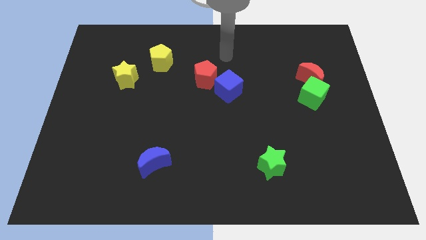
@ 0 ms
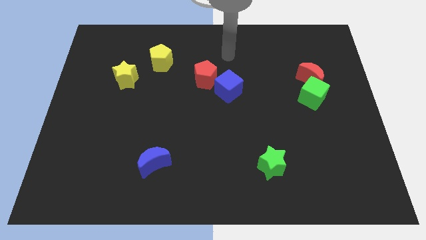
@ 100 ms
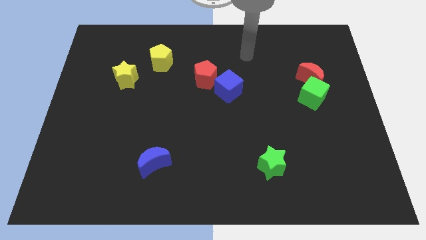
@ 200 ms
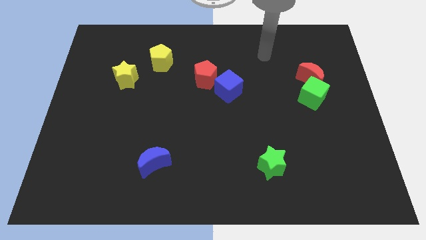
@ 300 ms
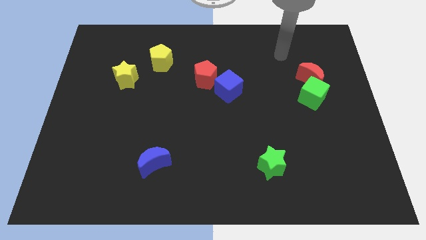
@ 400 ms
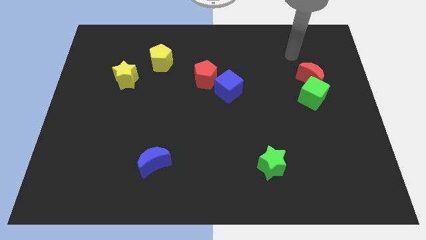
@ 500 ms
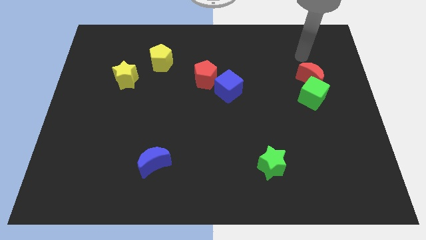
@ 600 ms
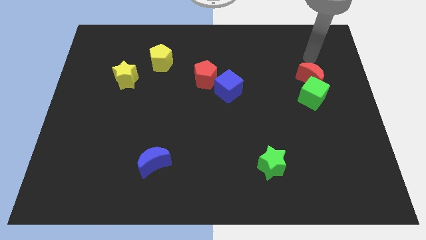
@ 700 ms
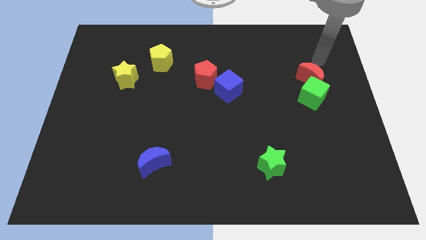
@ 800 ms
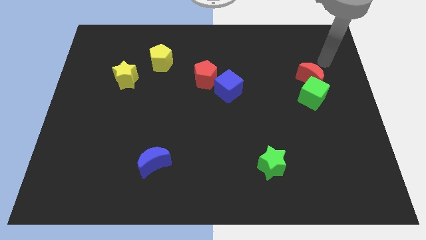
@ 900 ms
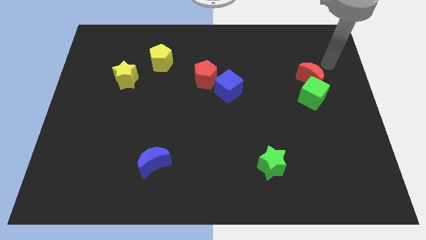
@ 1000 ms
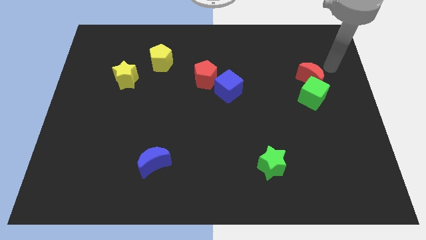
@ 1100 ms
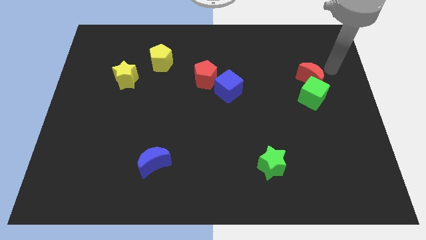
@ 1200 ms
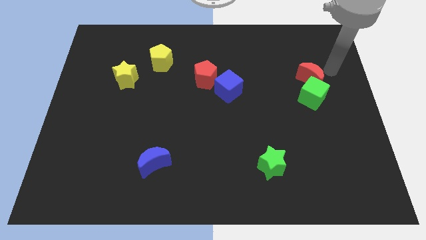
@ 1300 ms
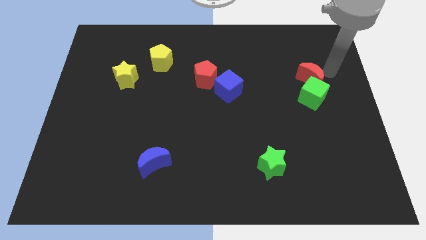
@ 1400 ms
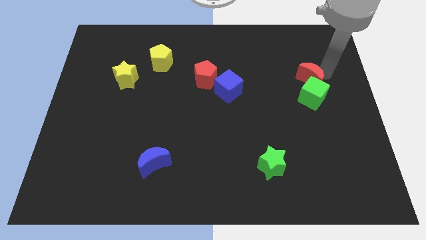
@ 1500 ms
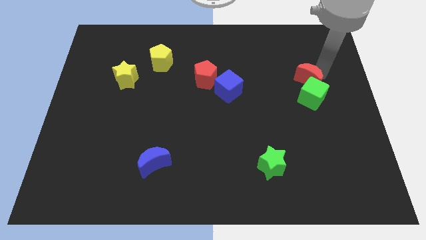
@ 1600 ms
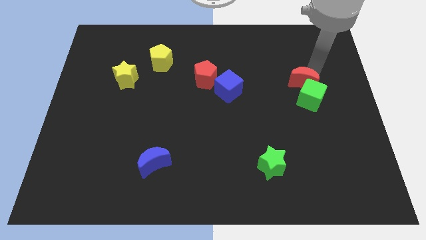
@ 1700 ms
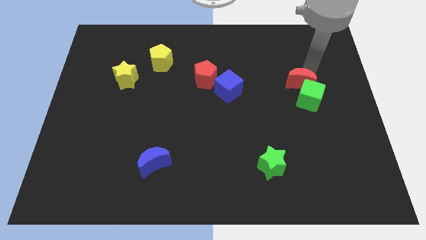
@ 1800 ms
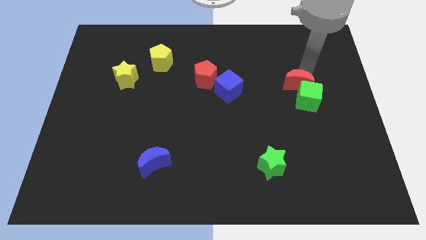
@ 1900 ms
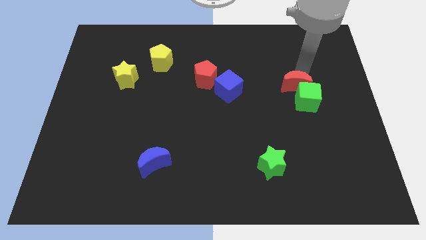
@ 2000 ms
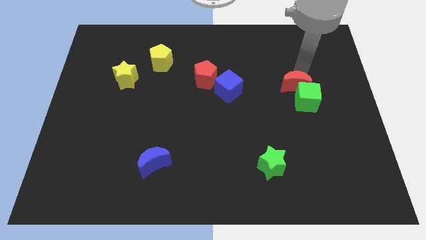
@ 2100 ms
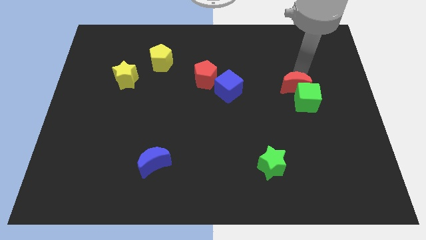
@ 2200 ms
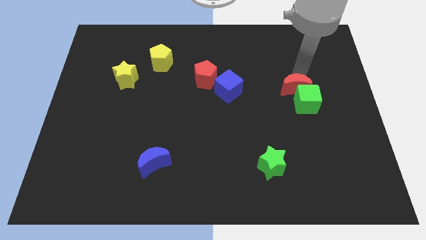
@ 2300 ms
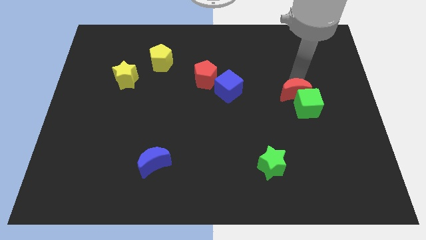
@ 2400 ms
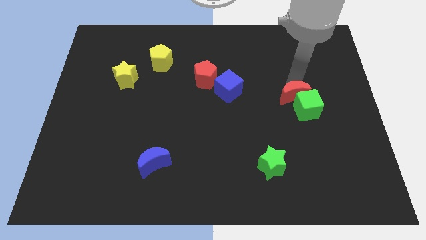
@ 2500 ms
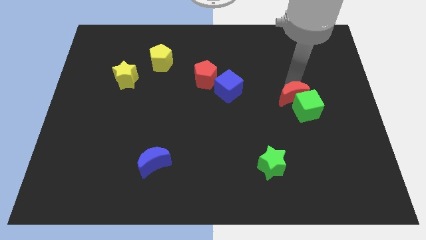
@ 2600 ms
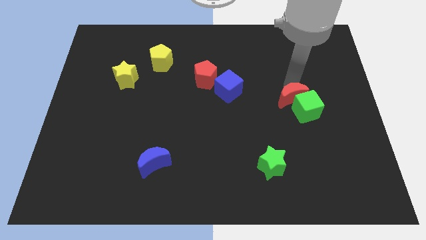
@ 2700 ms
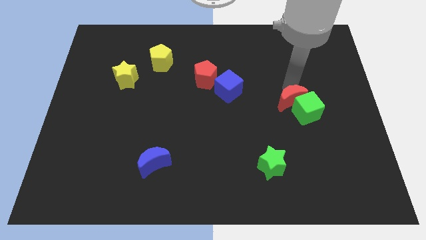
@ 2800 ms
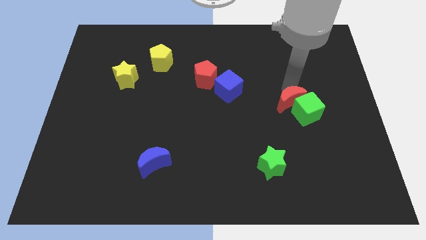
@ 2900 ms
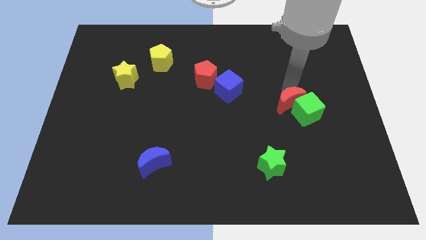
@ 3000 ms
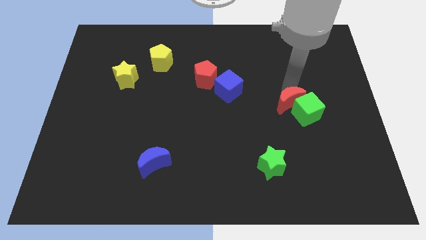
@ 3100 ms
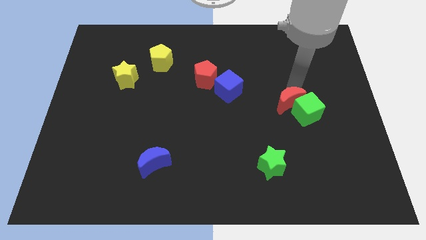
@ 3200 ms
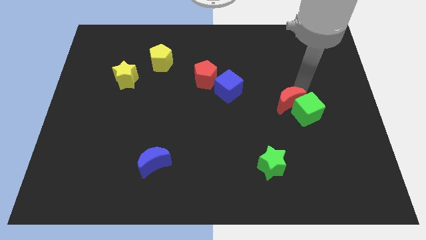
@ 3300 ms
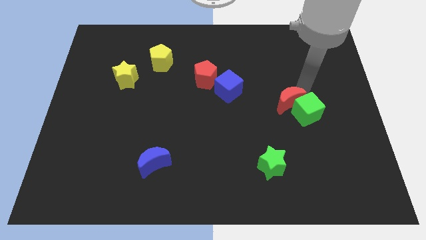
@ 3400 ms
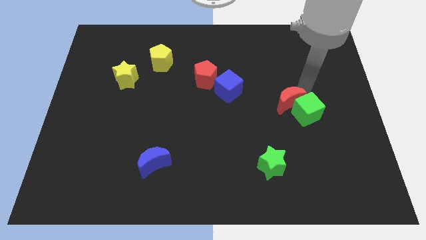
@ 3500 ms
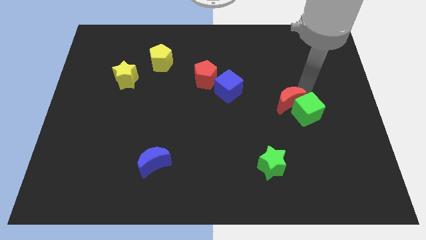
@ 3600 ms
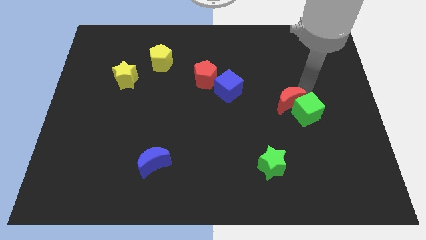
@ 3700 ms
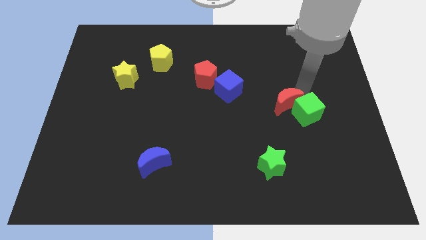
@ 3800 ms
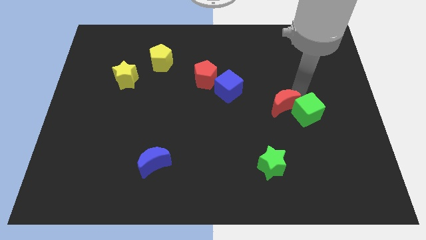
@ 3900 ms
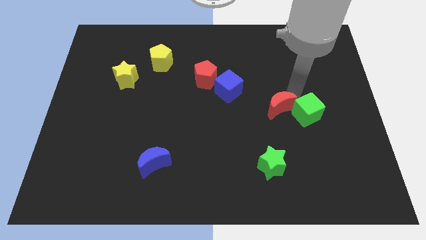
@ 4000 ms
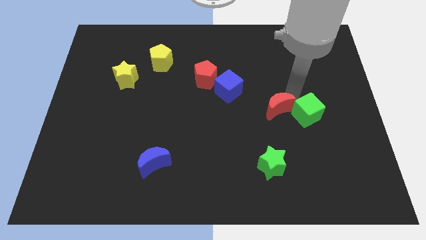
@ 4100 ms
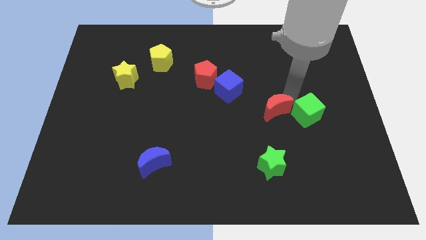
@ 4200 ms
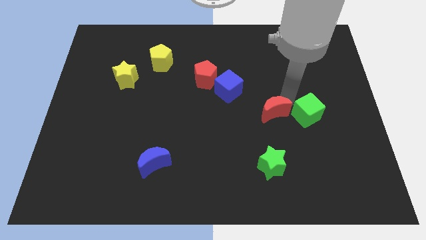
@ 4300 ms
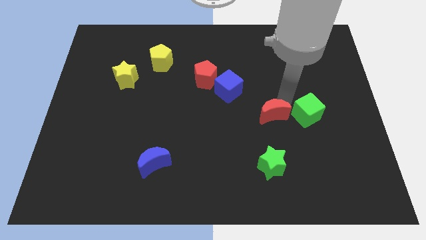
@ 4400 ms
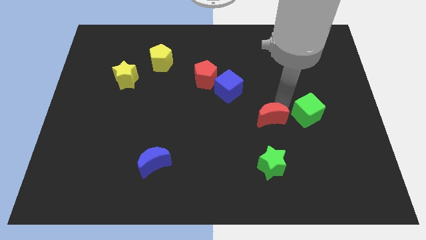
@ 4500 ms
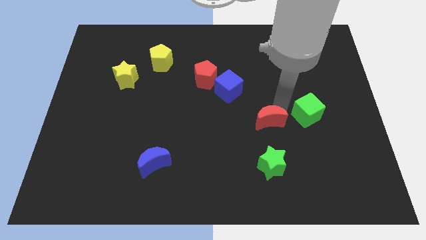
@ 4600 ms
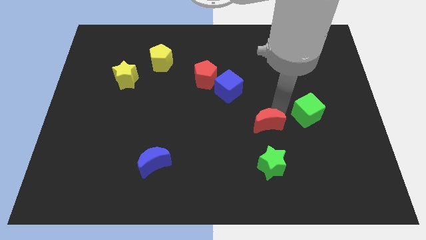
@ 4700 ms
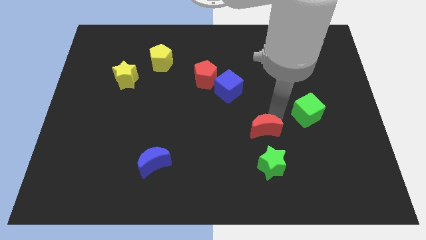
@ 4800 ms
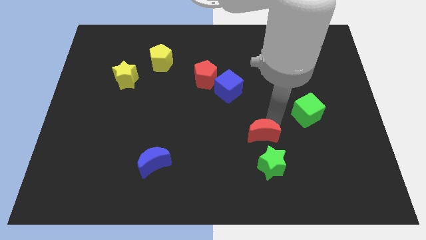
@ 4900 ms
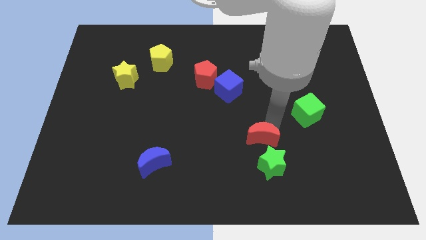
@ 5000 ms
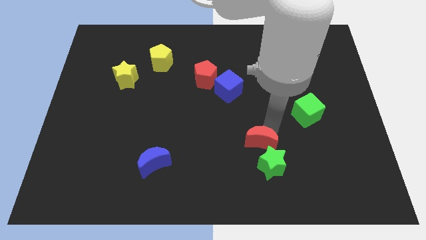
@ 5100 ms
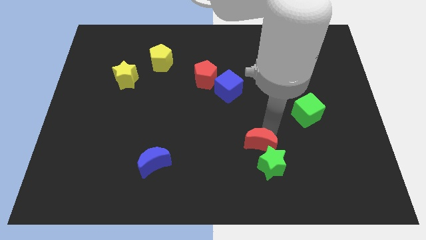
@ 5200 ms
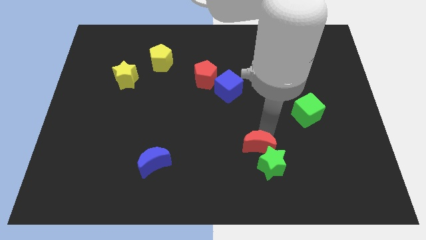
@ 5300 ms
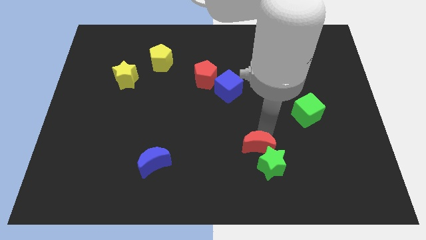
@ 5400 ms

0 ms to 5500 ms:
move the red moon to the green star

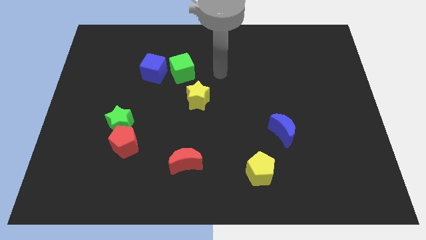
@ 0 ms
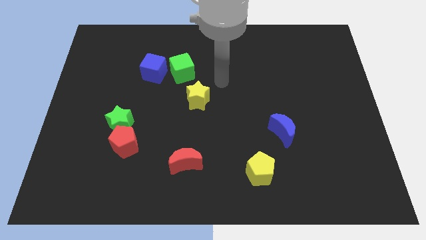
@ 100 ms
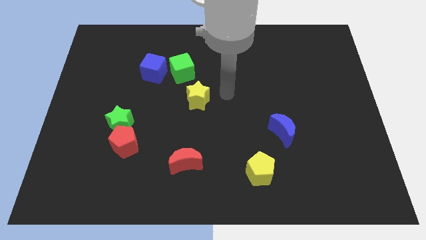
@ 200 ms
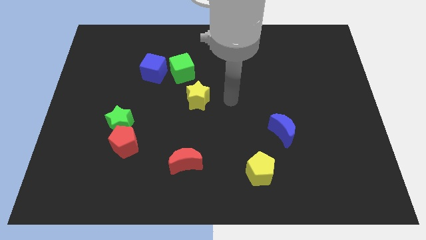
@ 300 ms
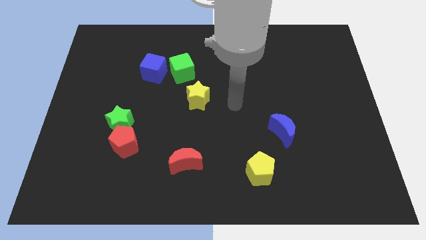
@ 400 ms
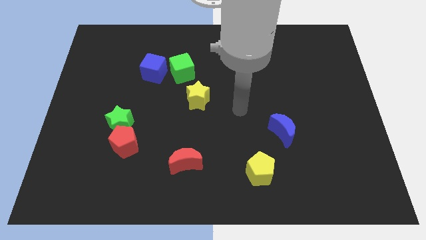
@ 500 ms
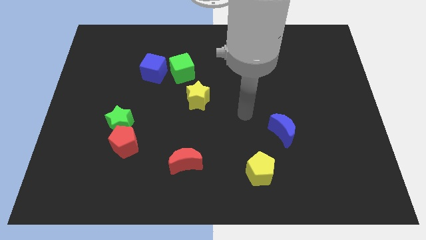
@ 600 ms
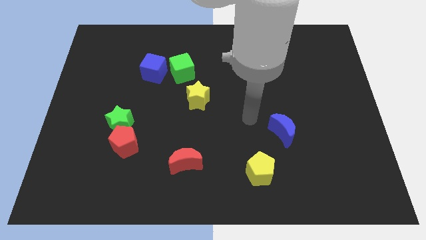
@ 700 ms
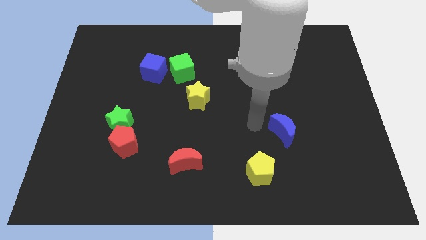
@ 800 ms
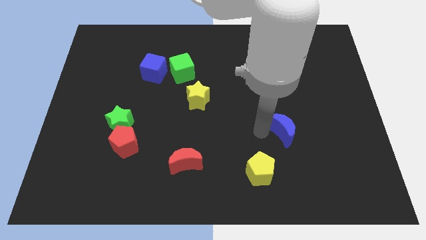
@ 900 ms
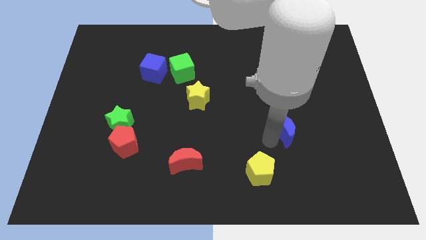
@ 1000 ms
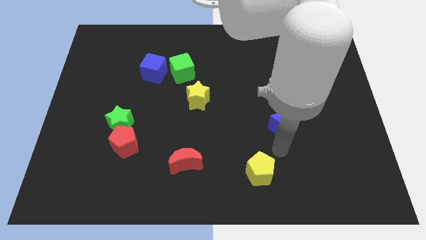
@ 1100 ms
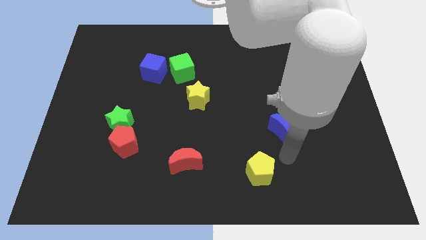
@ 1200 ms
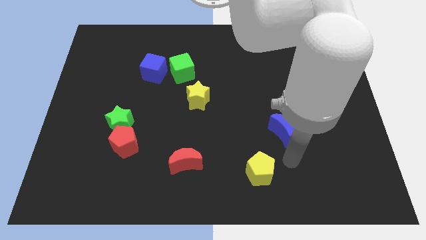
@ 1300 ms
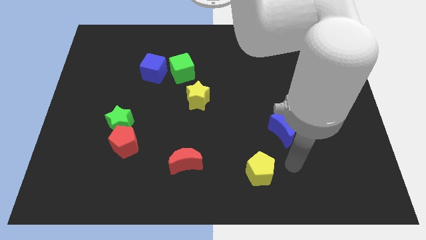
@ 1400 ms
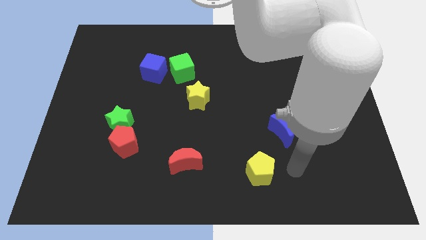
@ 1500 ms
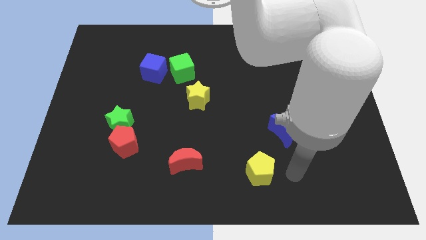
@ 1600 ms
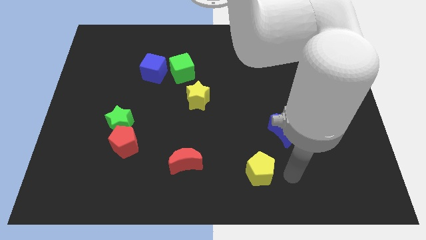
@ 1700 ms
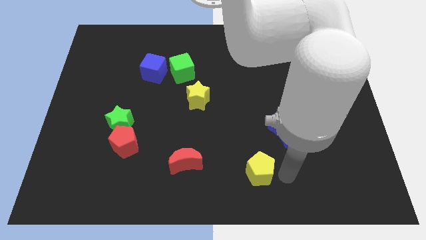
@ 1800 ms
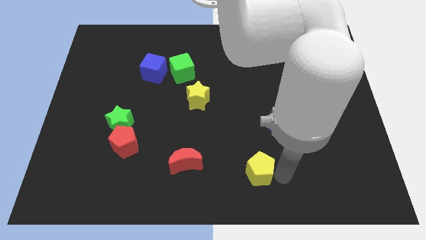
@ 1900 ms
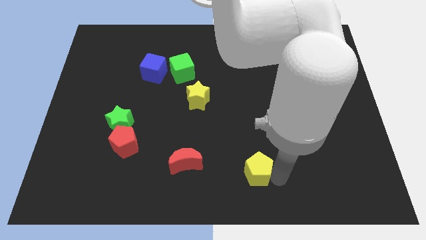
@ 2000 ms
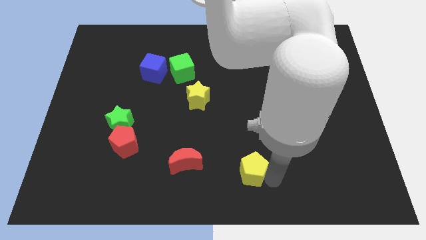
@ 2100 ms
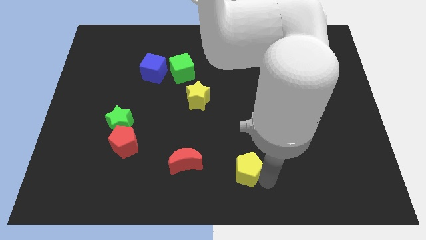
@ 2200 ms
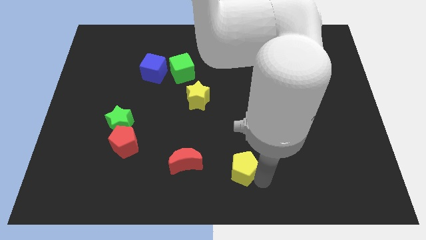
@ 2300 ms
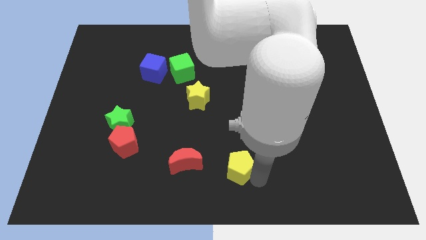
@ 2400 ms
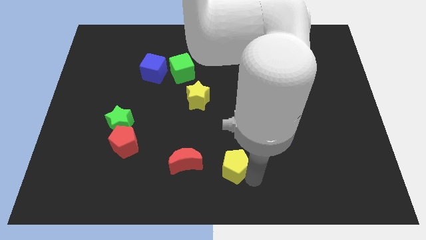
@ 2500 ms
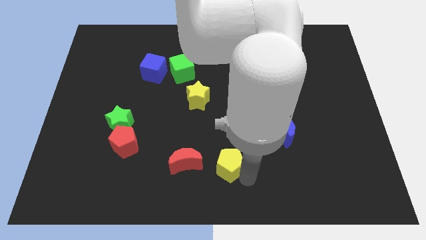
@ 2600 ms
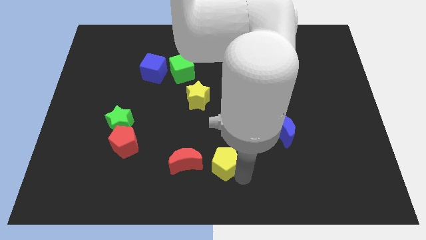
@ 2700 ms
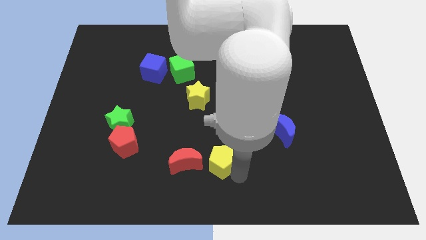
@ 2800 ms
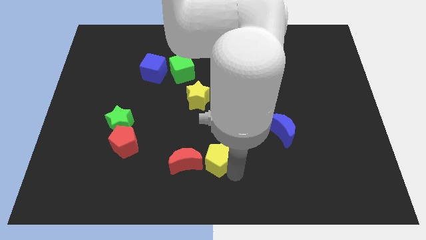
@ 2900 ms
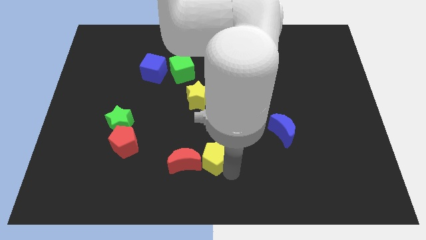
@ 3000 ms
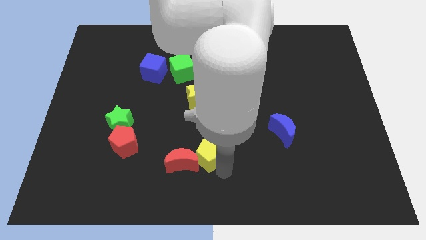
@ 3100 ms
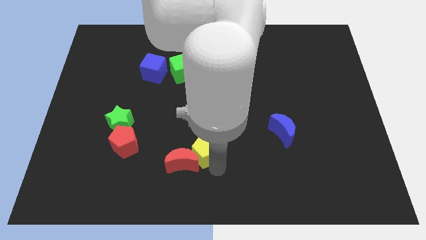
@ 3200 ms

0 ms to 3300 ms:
put the yellow pentagon close to the red moon
